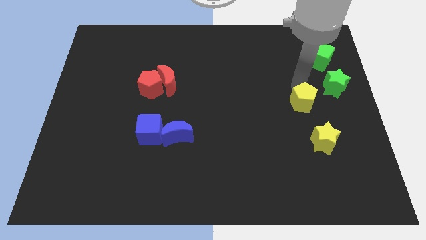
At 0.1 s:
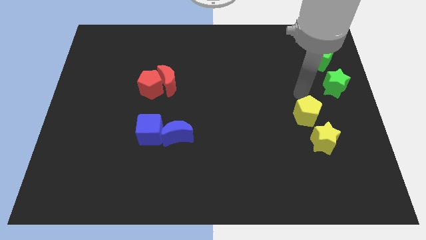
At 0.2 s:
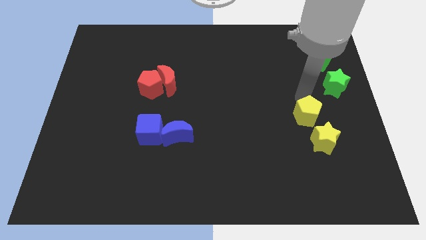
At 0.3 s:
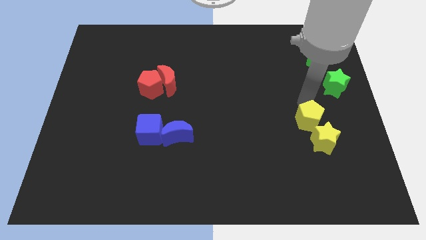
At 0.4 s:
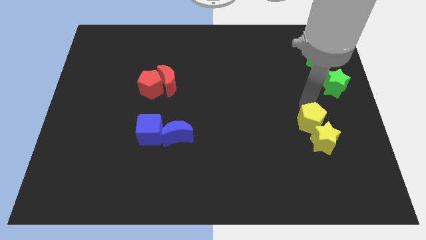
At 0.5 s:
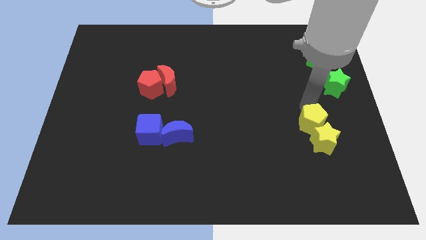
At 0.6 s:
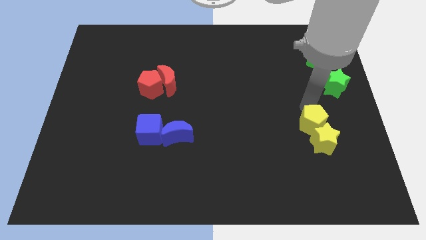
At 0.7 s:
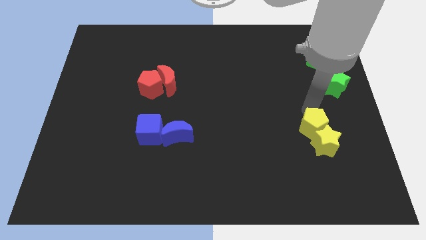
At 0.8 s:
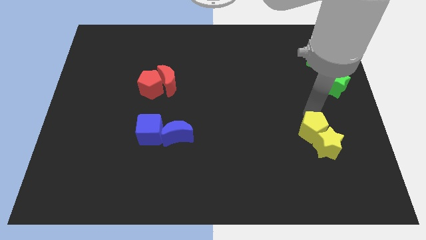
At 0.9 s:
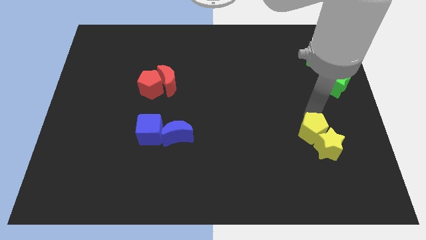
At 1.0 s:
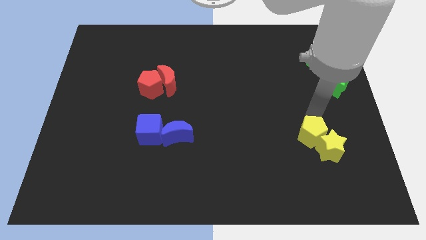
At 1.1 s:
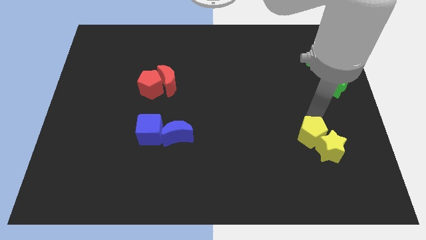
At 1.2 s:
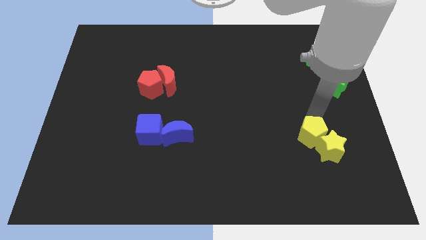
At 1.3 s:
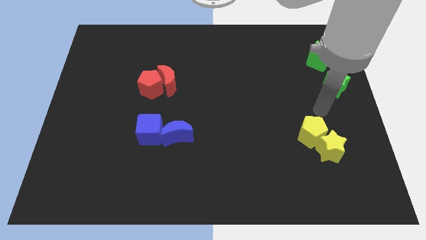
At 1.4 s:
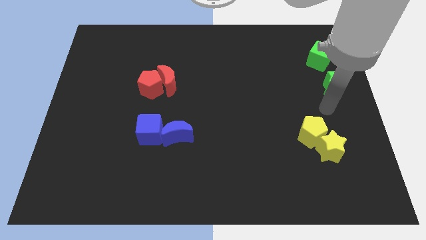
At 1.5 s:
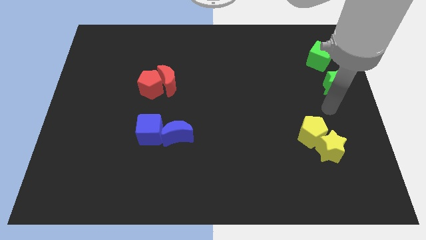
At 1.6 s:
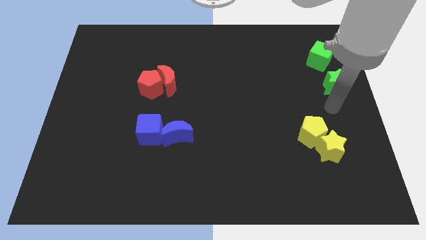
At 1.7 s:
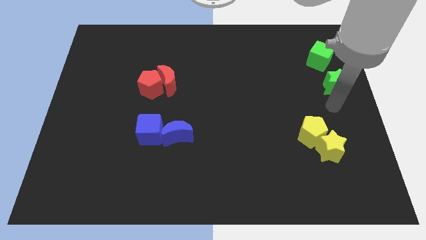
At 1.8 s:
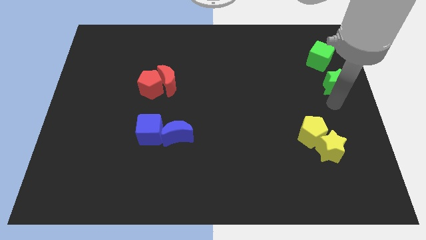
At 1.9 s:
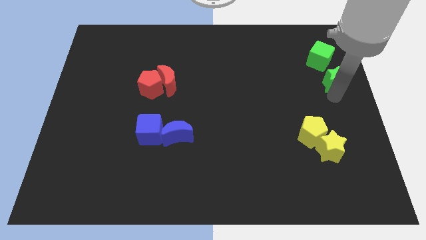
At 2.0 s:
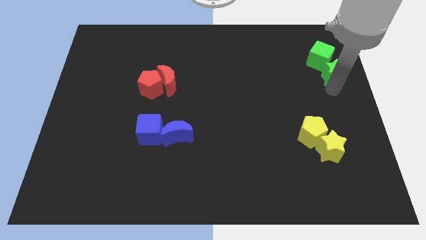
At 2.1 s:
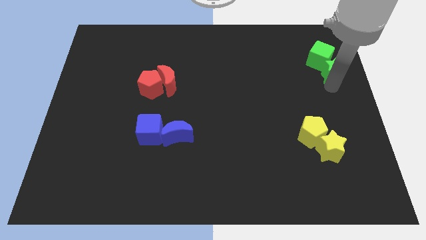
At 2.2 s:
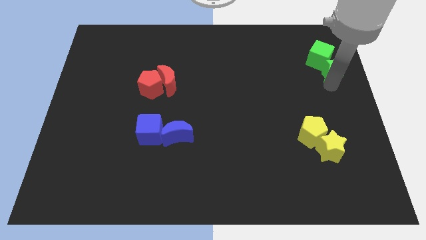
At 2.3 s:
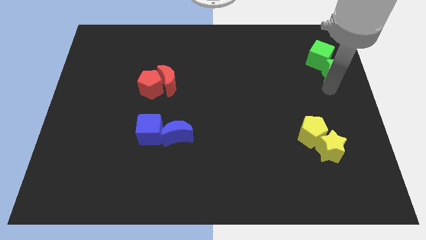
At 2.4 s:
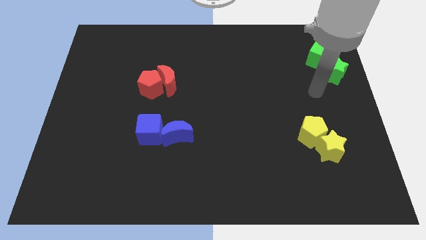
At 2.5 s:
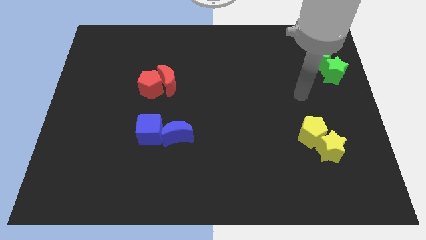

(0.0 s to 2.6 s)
separate the green blocks from yellow blocks

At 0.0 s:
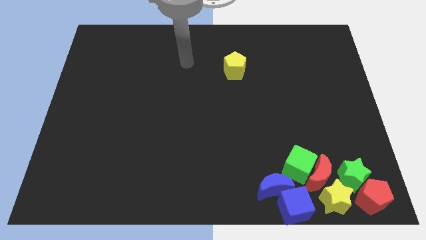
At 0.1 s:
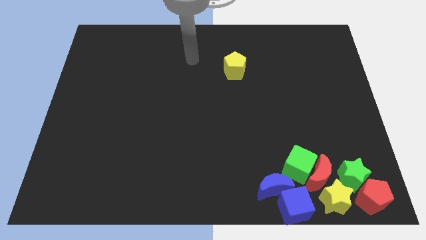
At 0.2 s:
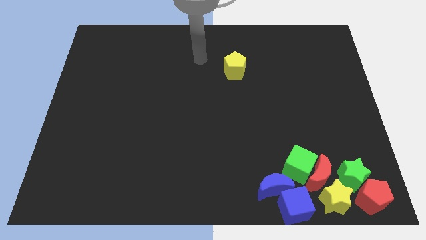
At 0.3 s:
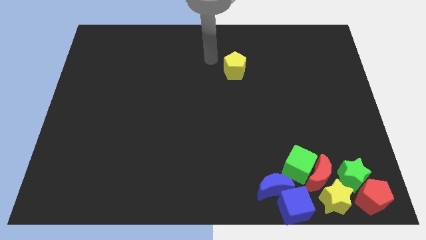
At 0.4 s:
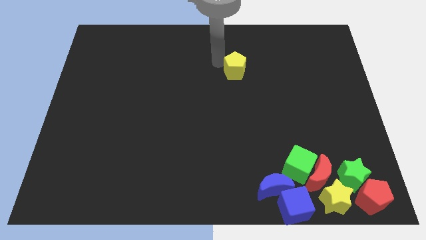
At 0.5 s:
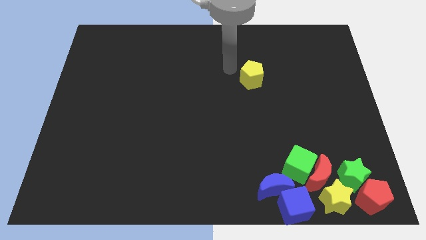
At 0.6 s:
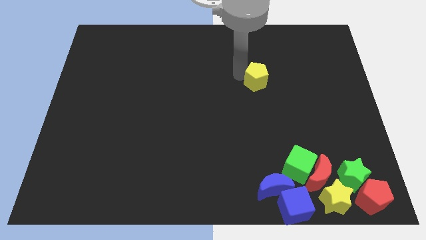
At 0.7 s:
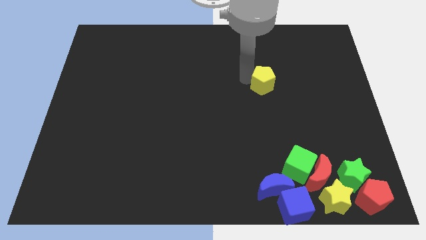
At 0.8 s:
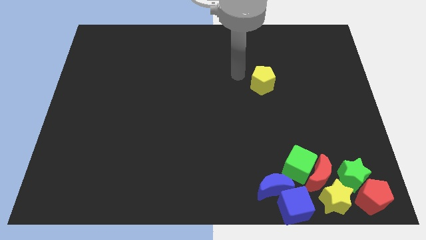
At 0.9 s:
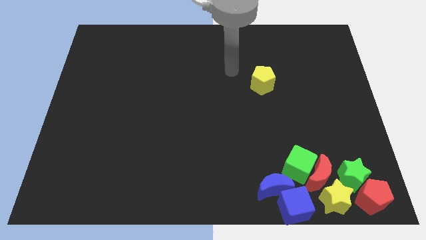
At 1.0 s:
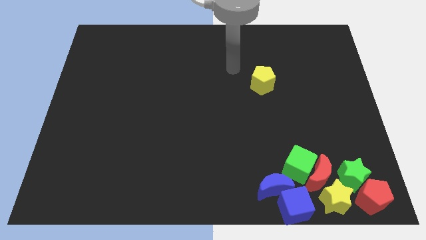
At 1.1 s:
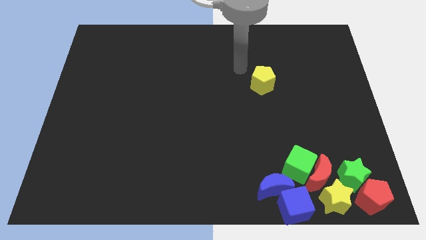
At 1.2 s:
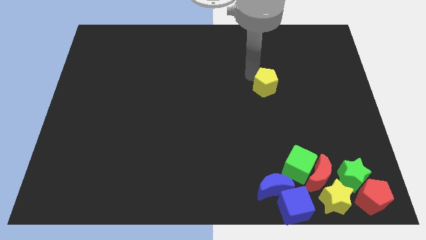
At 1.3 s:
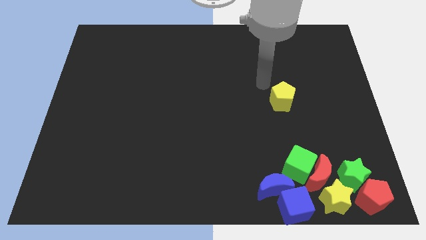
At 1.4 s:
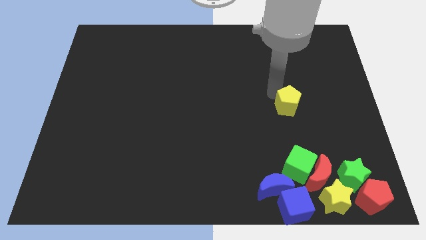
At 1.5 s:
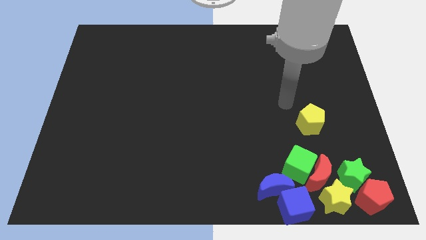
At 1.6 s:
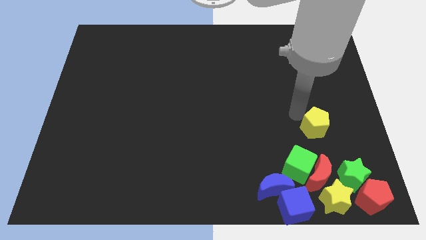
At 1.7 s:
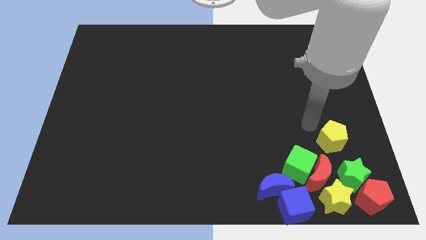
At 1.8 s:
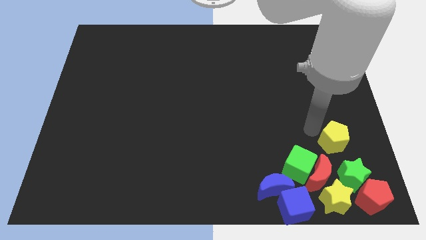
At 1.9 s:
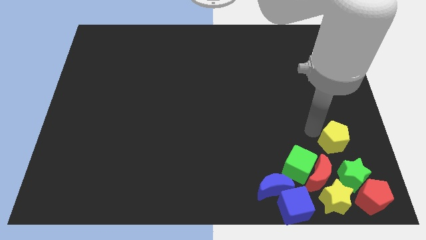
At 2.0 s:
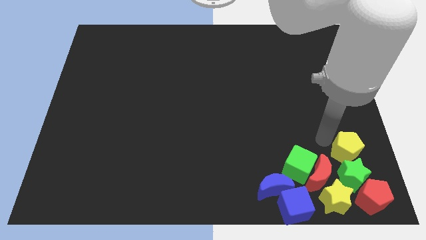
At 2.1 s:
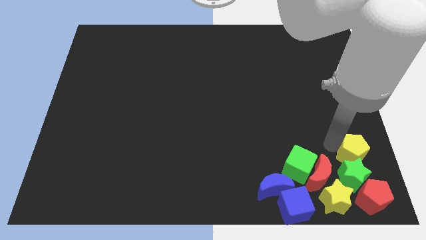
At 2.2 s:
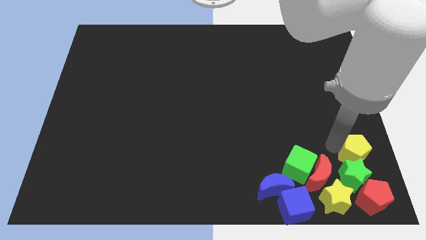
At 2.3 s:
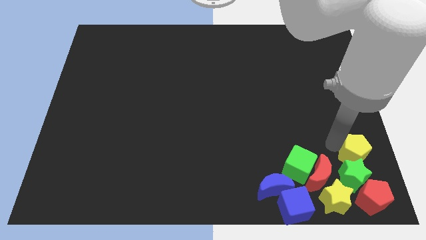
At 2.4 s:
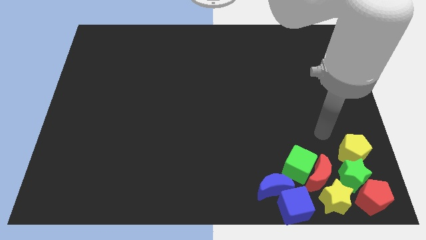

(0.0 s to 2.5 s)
place the yellow pentagon near the green star

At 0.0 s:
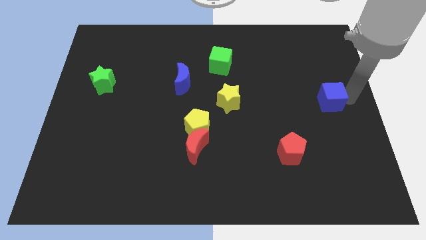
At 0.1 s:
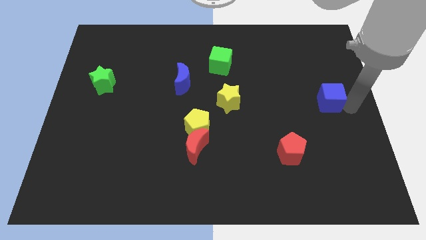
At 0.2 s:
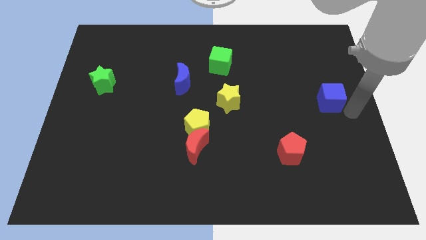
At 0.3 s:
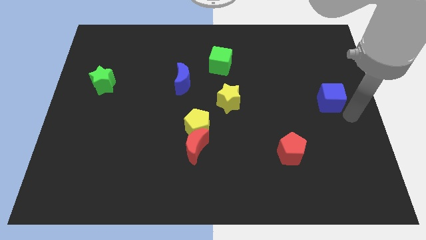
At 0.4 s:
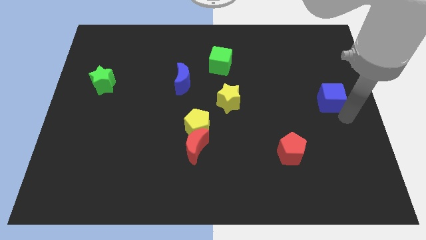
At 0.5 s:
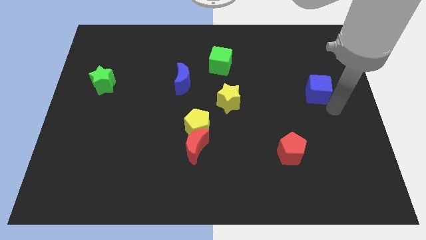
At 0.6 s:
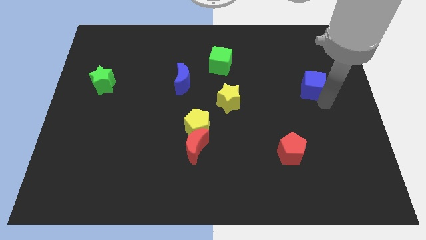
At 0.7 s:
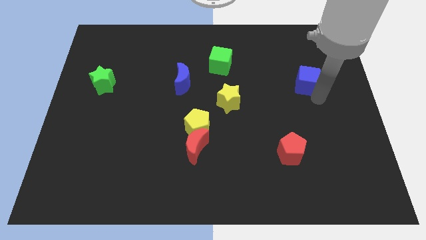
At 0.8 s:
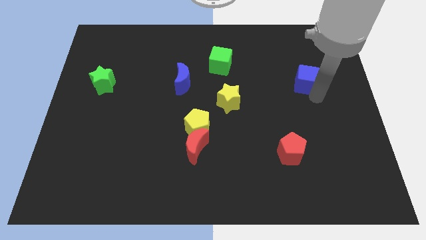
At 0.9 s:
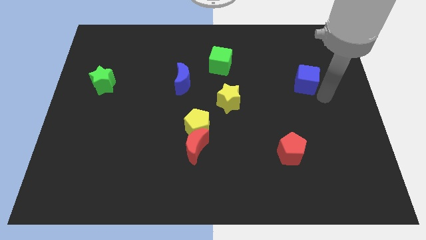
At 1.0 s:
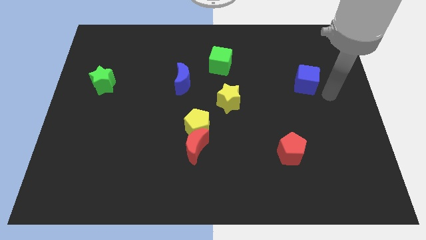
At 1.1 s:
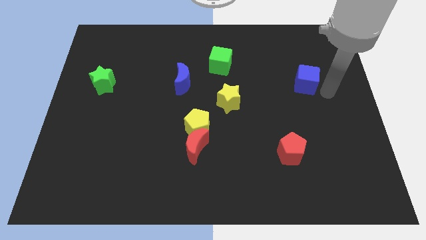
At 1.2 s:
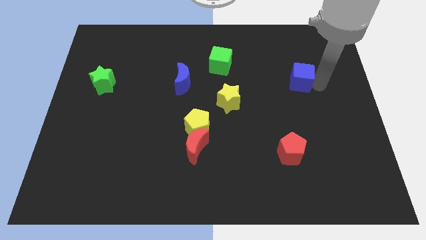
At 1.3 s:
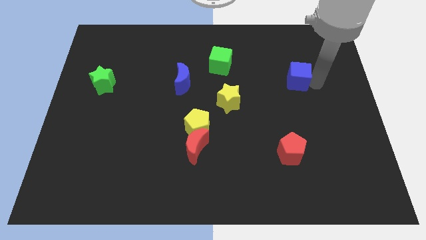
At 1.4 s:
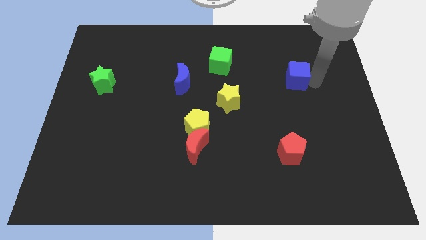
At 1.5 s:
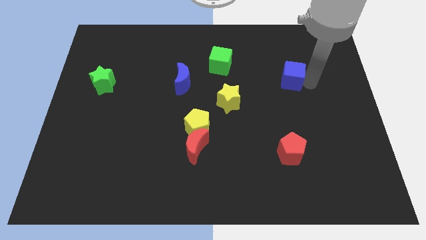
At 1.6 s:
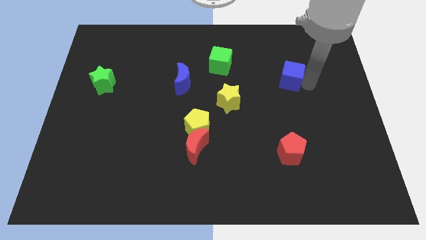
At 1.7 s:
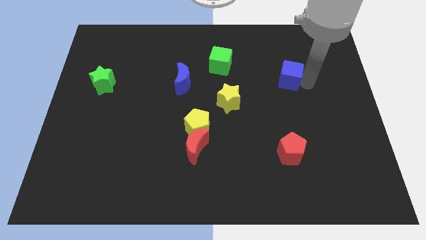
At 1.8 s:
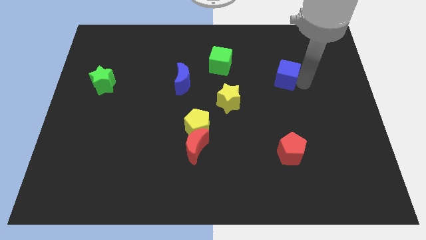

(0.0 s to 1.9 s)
move the blue cube towards the top side

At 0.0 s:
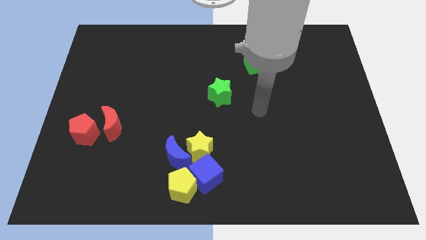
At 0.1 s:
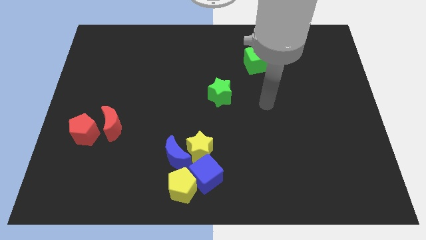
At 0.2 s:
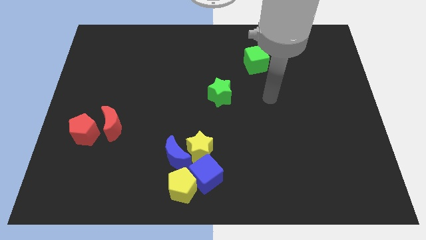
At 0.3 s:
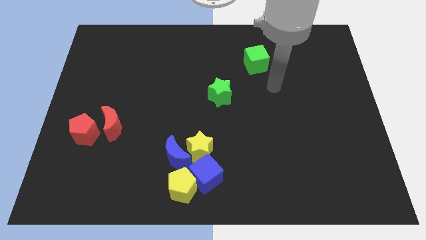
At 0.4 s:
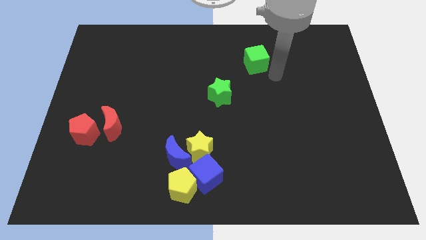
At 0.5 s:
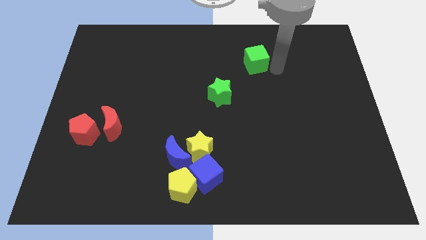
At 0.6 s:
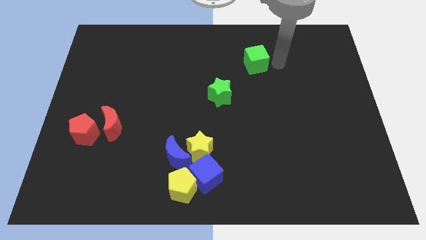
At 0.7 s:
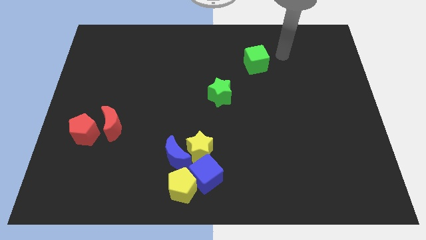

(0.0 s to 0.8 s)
move your hand to the right of the green cube

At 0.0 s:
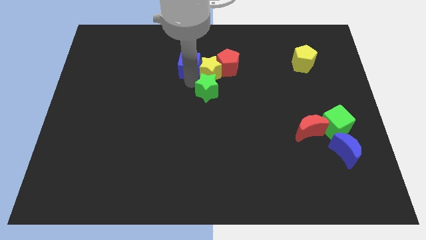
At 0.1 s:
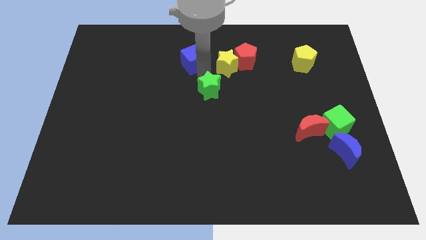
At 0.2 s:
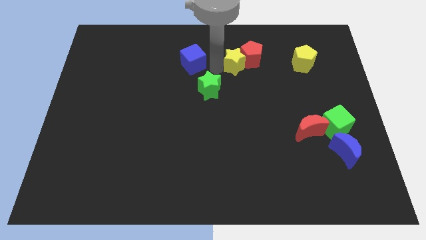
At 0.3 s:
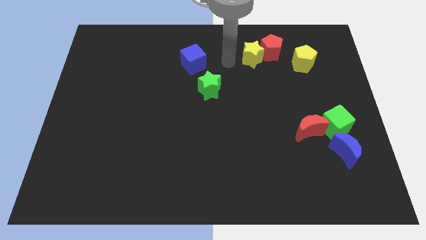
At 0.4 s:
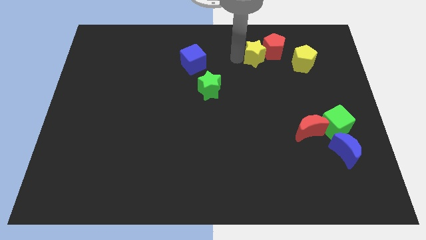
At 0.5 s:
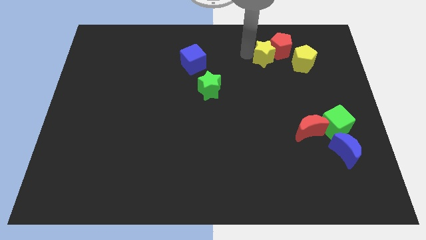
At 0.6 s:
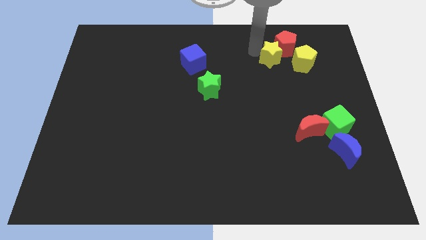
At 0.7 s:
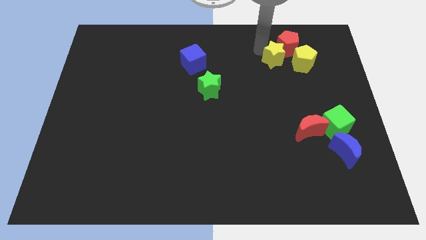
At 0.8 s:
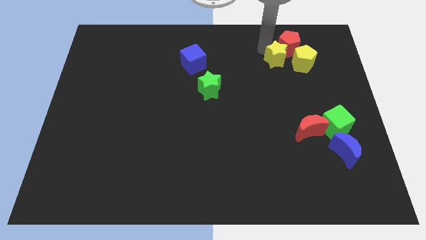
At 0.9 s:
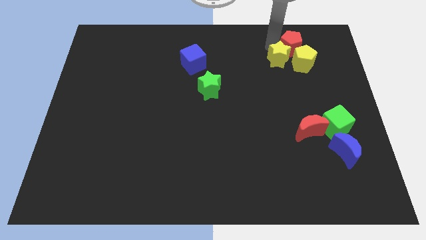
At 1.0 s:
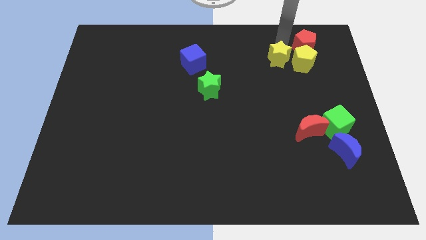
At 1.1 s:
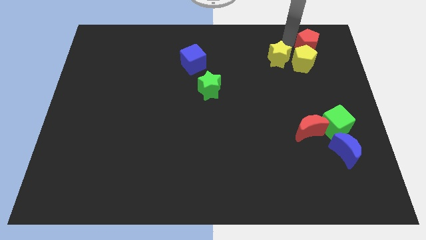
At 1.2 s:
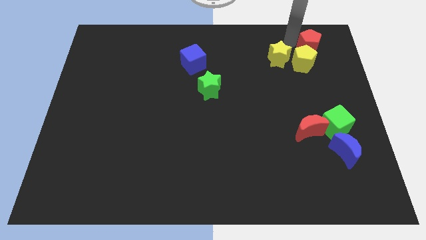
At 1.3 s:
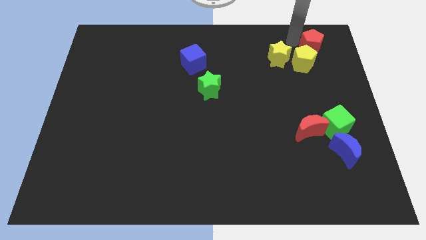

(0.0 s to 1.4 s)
move your arm to the left of red pentagon
